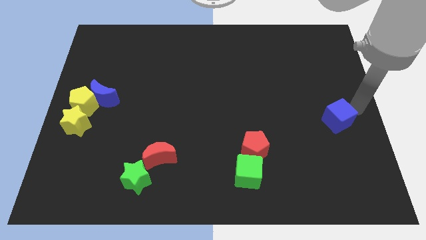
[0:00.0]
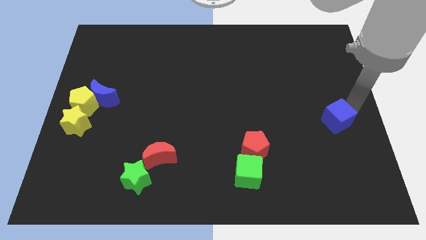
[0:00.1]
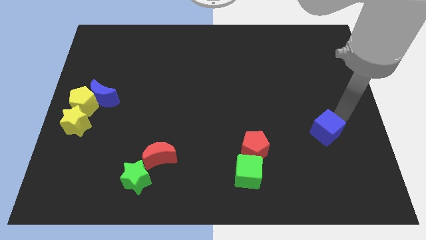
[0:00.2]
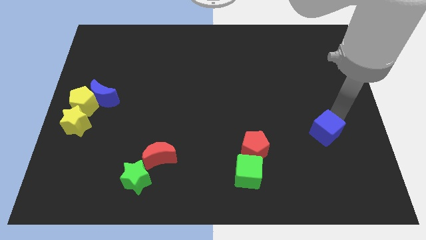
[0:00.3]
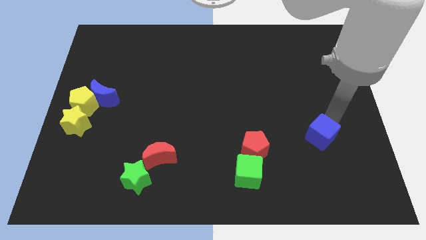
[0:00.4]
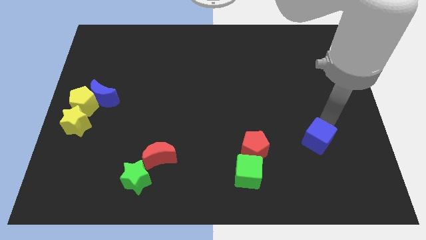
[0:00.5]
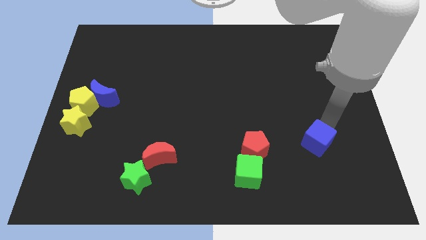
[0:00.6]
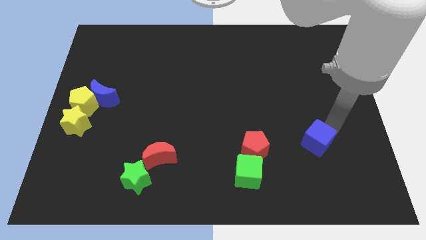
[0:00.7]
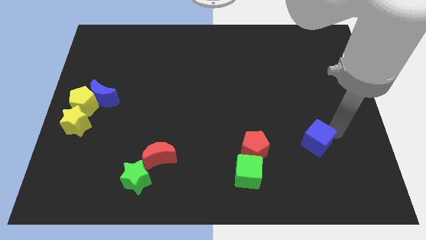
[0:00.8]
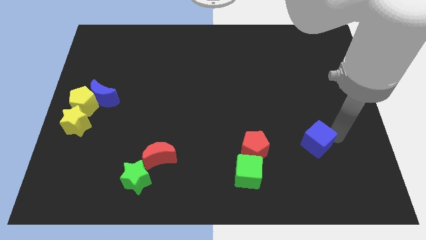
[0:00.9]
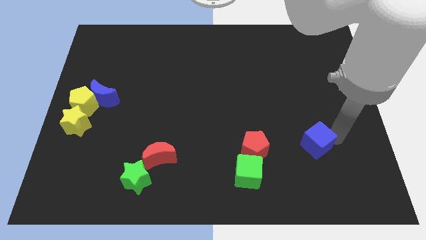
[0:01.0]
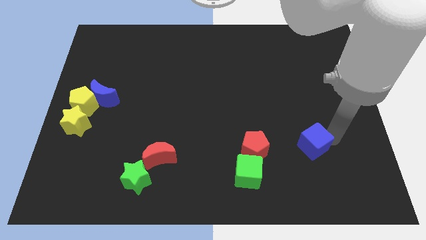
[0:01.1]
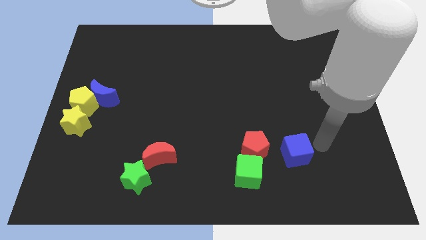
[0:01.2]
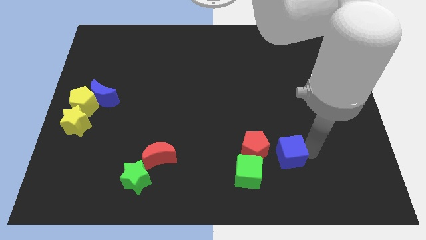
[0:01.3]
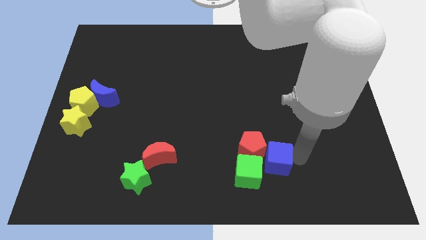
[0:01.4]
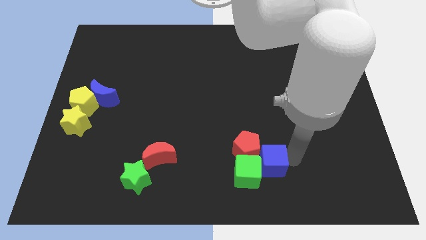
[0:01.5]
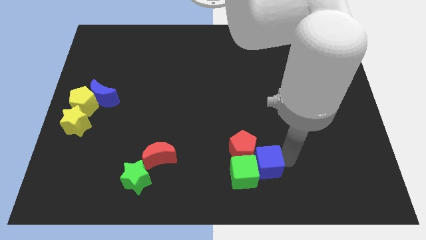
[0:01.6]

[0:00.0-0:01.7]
move the blue cube into the right side of the group of blocks

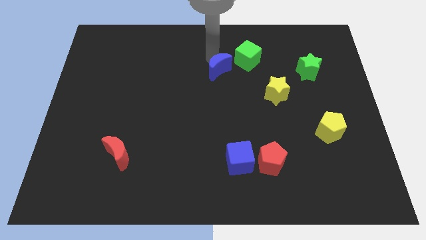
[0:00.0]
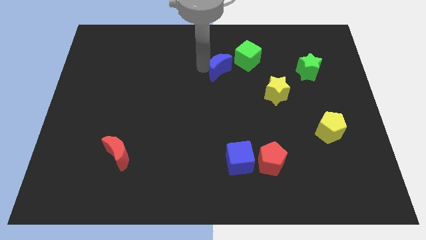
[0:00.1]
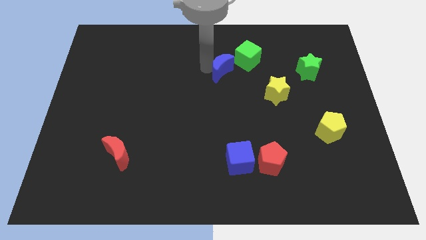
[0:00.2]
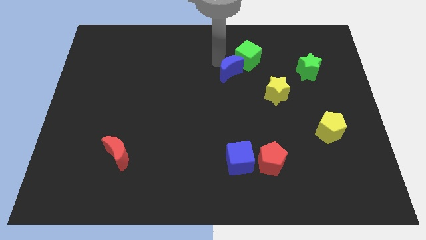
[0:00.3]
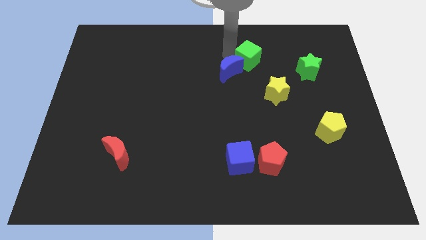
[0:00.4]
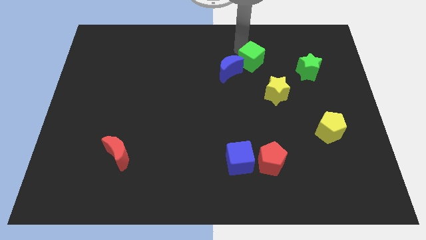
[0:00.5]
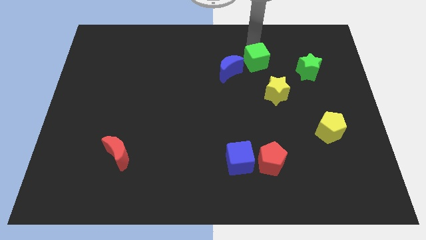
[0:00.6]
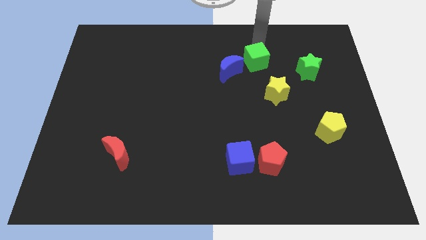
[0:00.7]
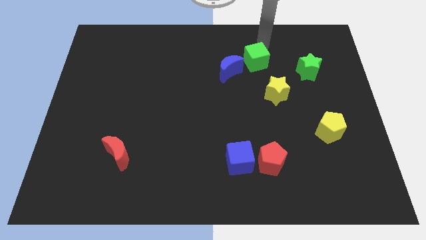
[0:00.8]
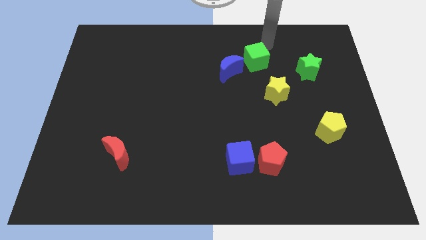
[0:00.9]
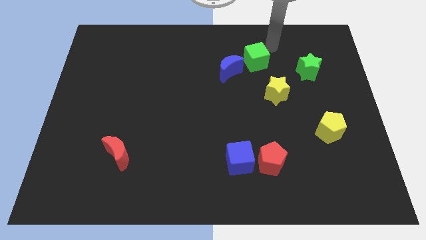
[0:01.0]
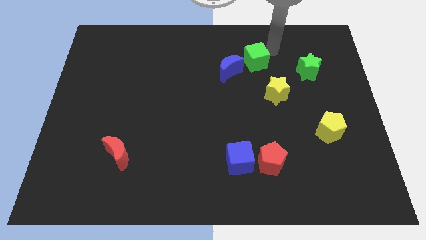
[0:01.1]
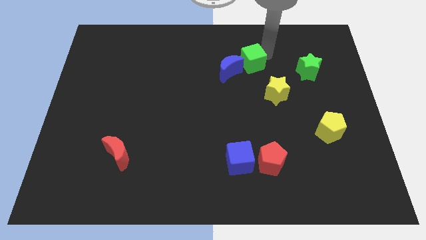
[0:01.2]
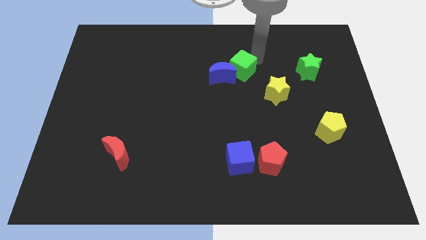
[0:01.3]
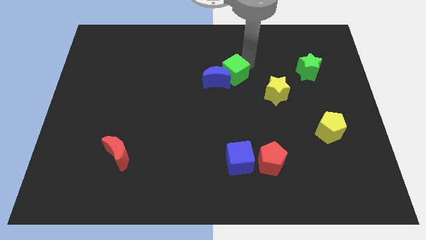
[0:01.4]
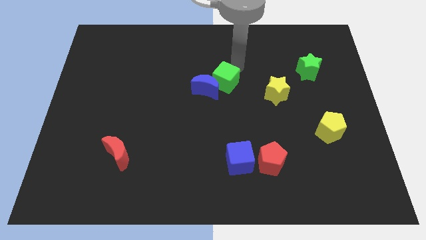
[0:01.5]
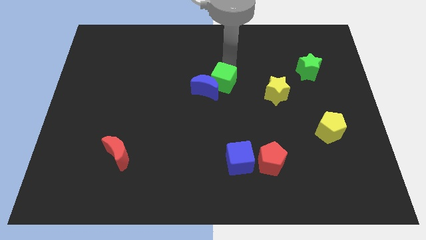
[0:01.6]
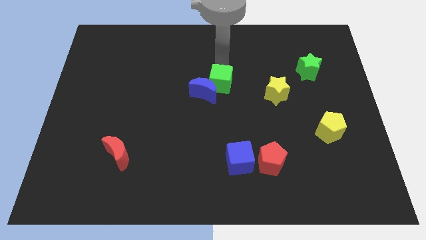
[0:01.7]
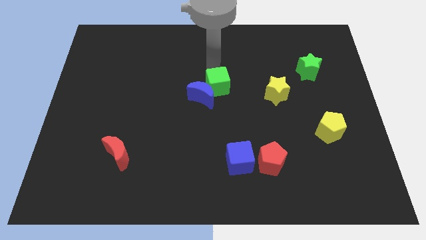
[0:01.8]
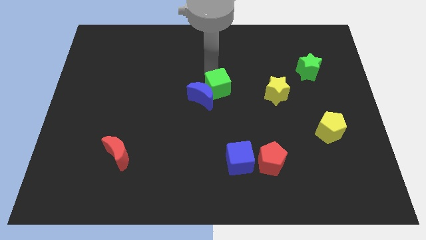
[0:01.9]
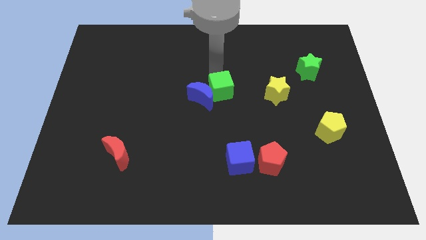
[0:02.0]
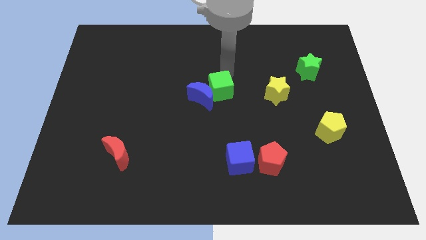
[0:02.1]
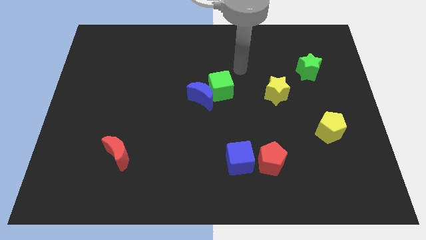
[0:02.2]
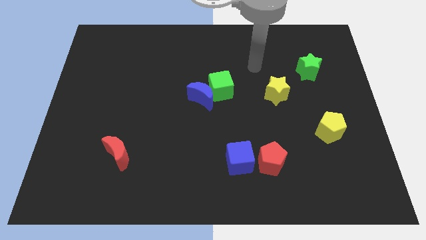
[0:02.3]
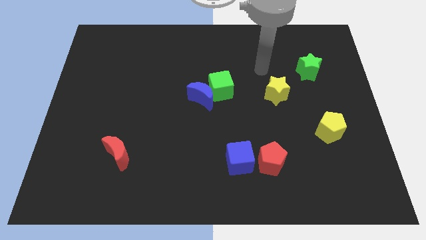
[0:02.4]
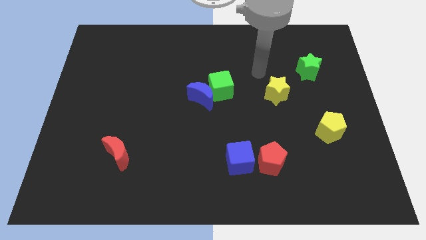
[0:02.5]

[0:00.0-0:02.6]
move the blue crescent into the green cube to the center

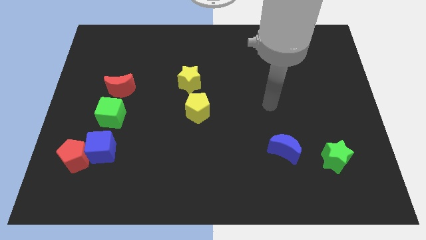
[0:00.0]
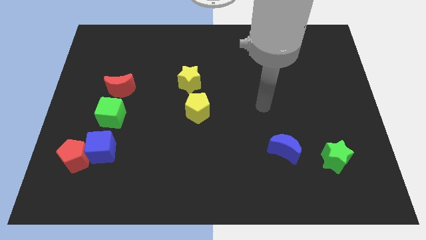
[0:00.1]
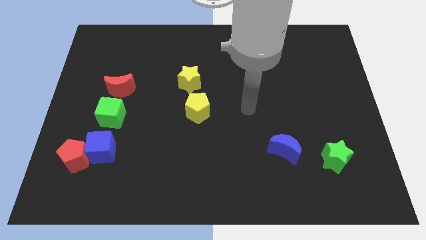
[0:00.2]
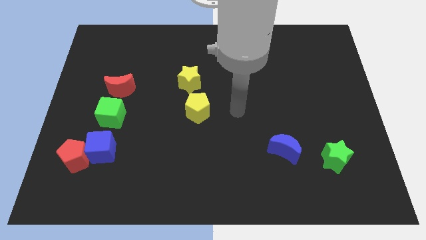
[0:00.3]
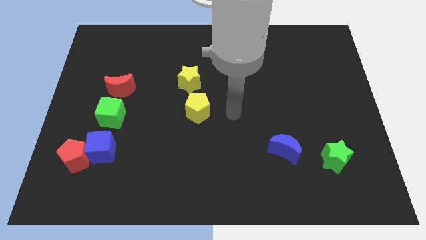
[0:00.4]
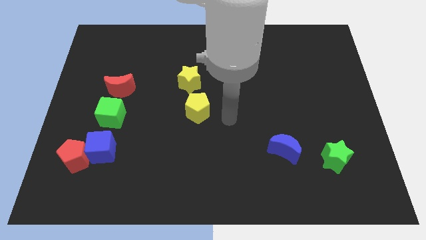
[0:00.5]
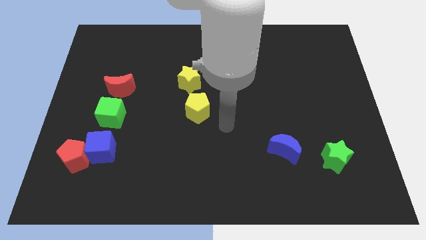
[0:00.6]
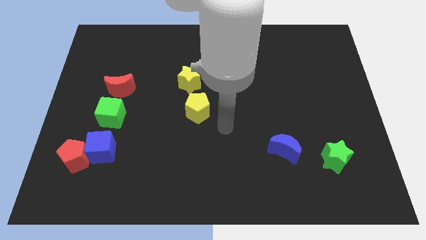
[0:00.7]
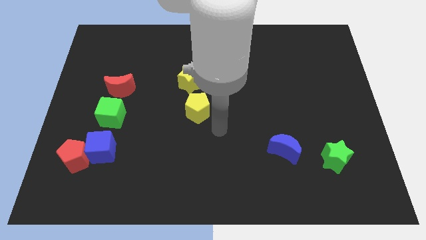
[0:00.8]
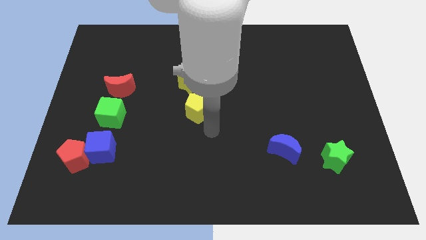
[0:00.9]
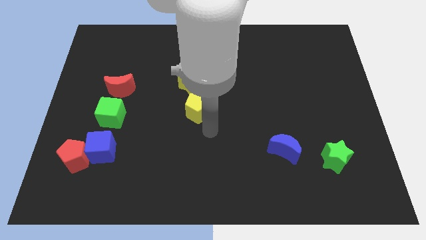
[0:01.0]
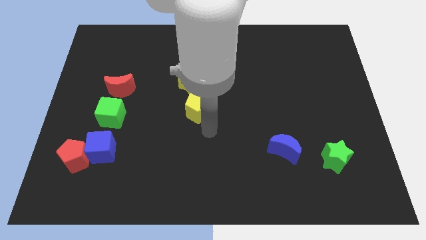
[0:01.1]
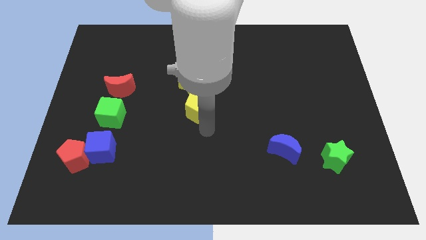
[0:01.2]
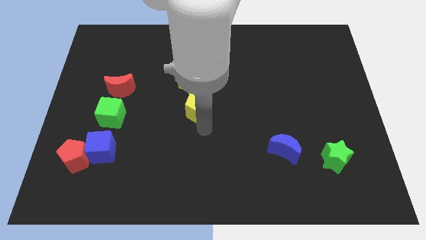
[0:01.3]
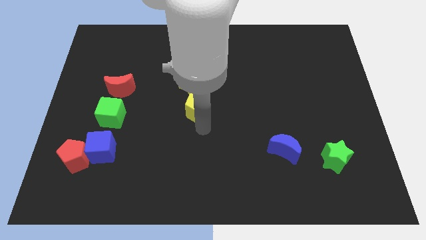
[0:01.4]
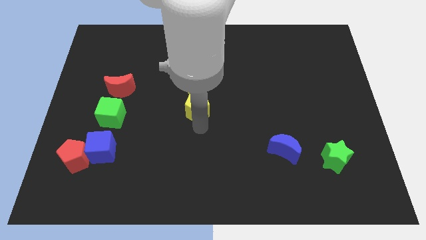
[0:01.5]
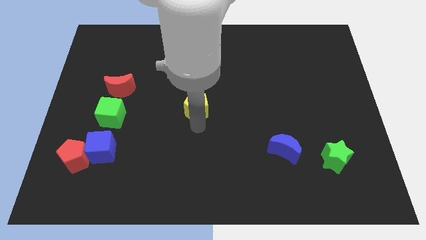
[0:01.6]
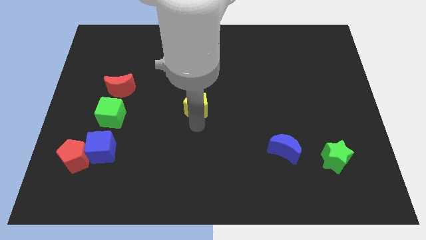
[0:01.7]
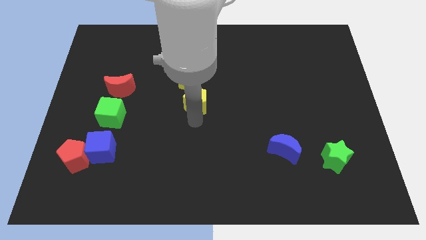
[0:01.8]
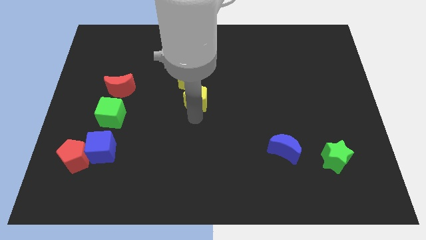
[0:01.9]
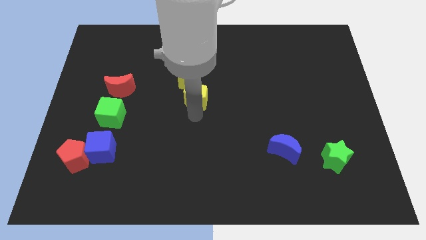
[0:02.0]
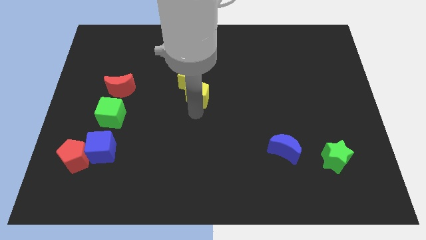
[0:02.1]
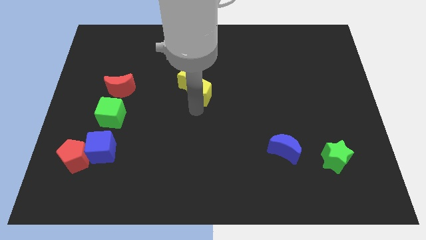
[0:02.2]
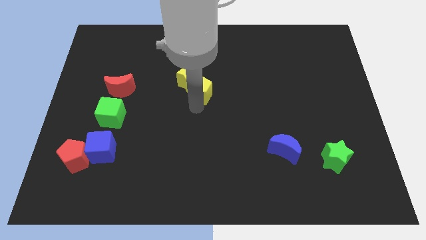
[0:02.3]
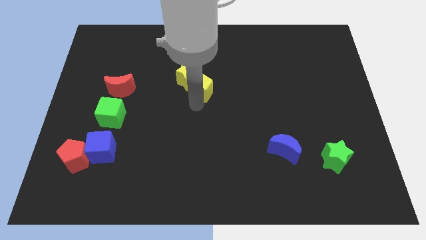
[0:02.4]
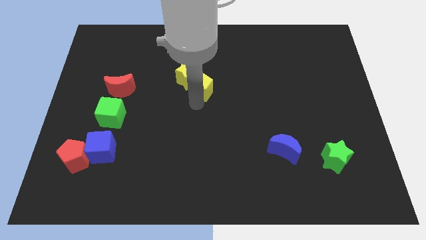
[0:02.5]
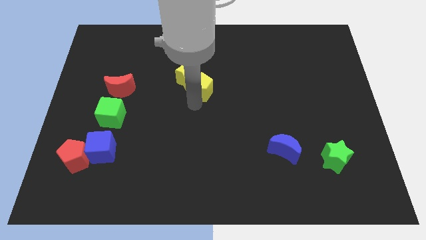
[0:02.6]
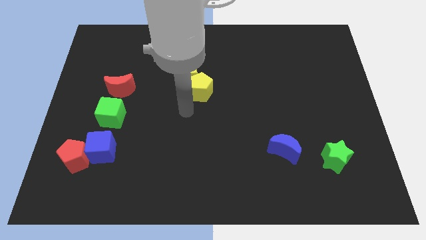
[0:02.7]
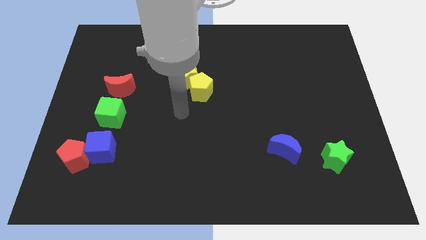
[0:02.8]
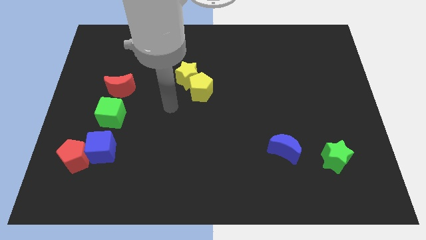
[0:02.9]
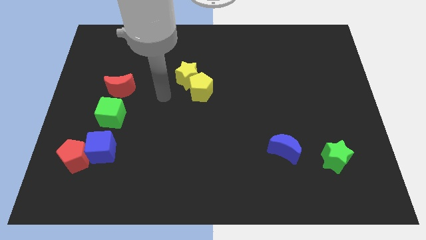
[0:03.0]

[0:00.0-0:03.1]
push the yellow pentagon into the yellow star

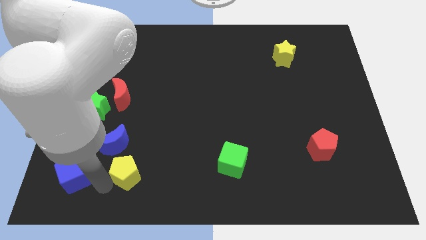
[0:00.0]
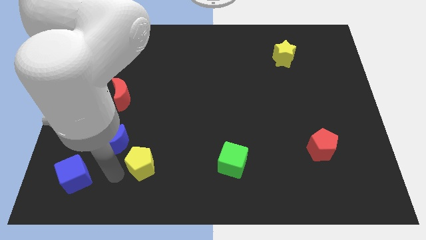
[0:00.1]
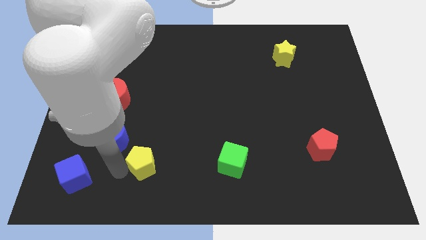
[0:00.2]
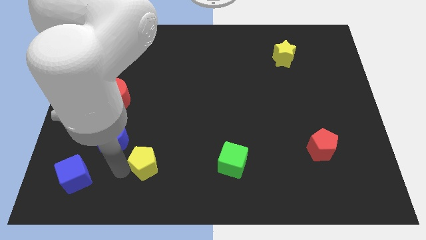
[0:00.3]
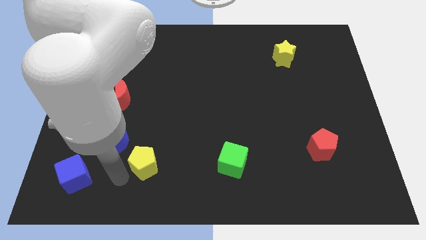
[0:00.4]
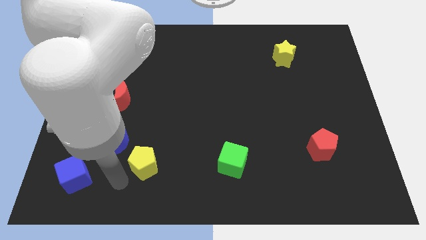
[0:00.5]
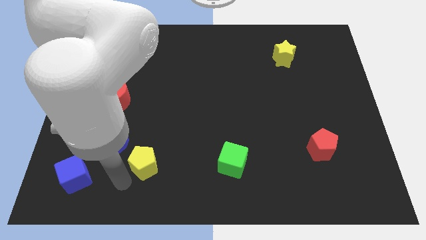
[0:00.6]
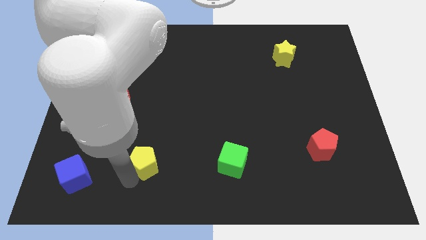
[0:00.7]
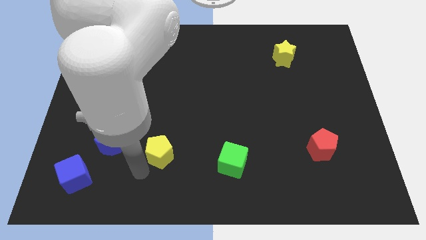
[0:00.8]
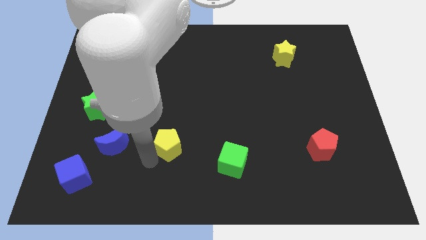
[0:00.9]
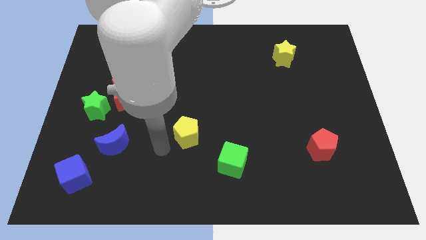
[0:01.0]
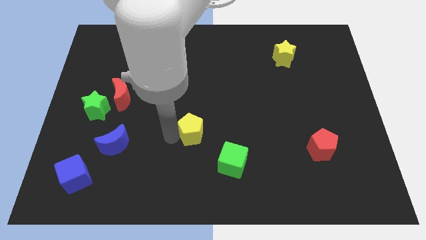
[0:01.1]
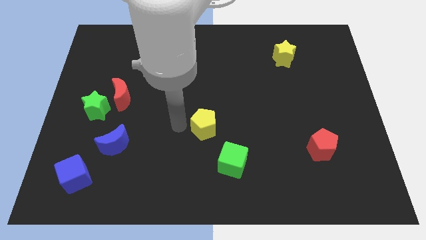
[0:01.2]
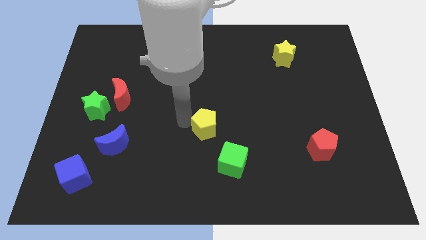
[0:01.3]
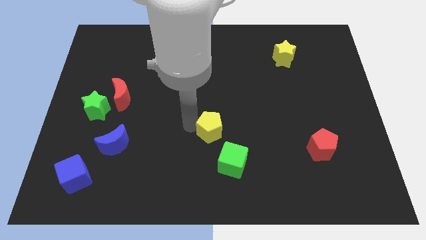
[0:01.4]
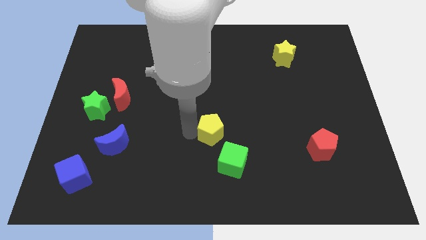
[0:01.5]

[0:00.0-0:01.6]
push the yellow pentagon towards the green cube
